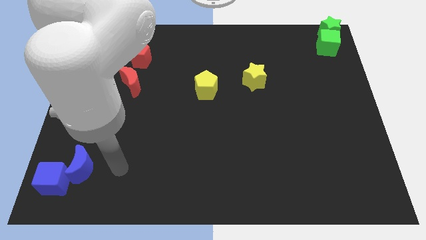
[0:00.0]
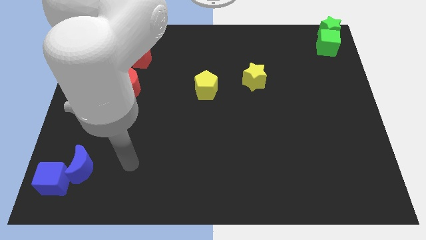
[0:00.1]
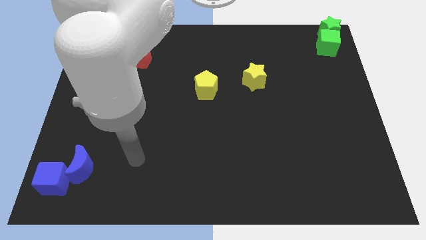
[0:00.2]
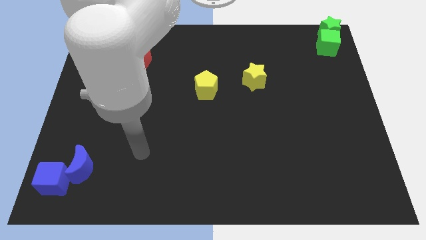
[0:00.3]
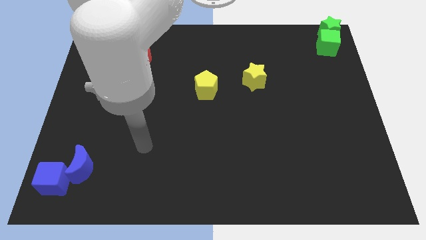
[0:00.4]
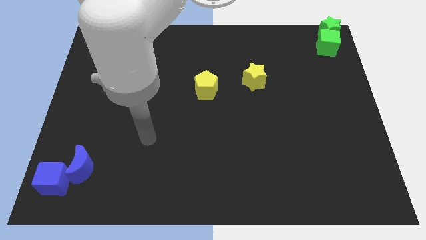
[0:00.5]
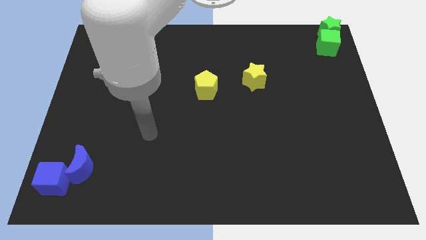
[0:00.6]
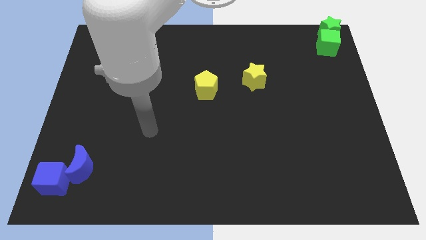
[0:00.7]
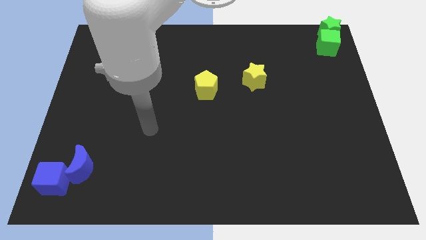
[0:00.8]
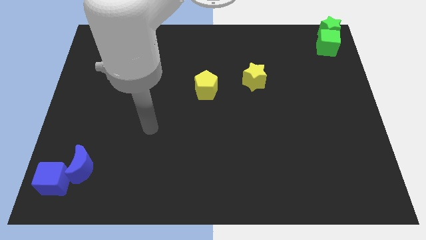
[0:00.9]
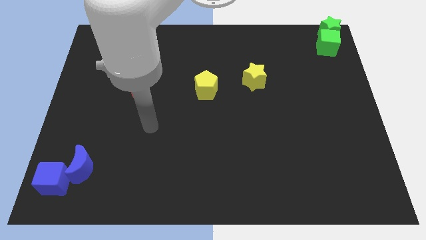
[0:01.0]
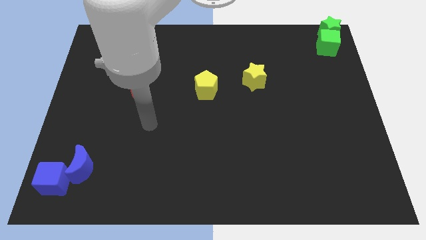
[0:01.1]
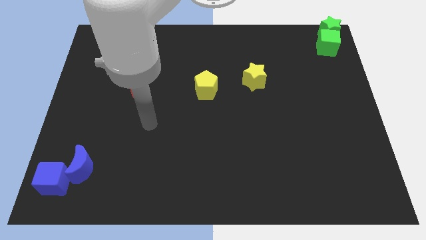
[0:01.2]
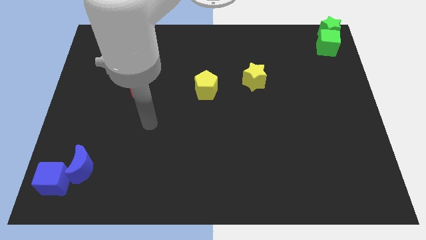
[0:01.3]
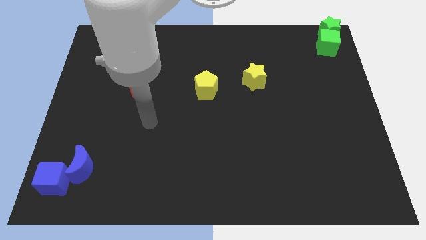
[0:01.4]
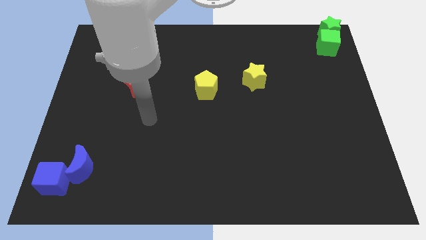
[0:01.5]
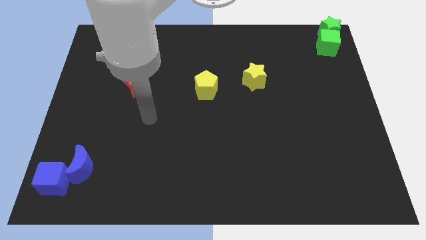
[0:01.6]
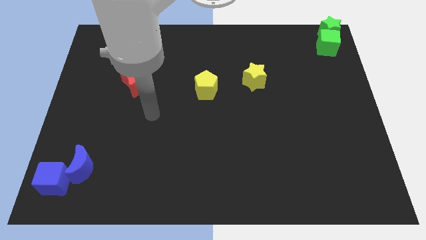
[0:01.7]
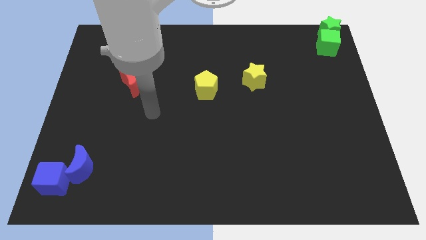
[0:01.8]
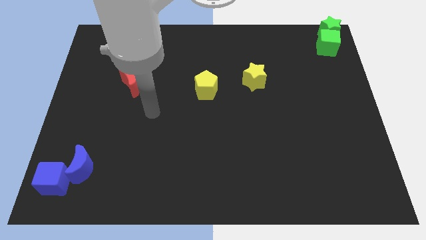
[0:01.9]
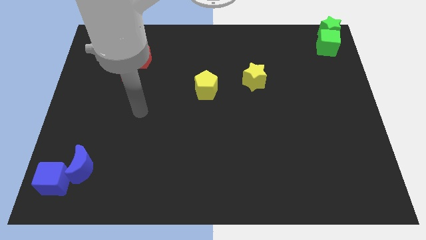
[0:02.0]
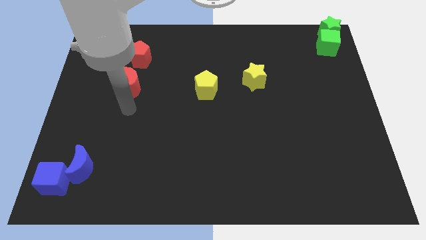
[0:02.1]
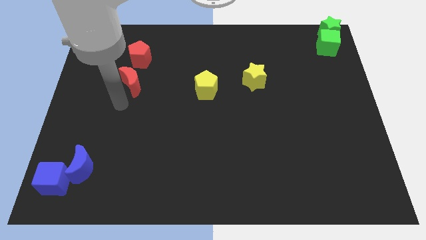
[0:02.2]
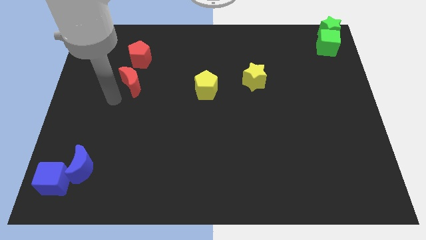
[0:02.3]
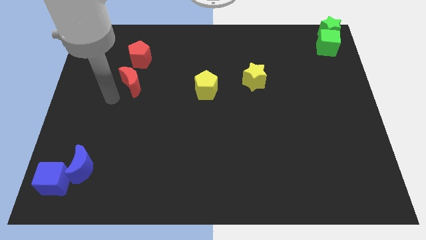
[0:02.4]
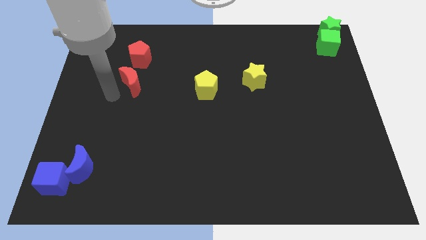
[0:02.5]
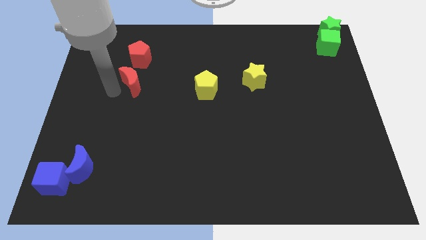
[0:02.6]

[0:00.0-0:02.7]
place your arm at the left of the red crescent

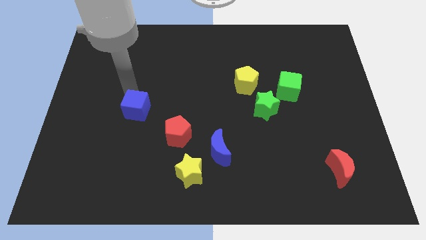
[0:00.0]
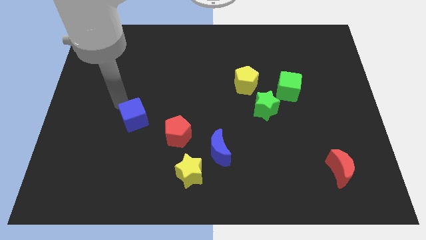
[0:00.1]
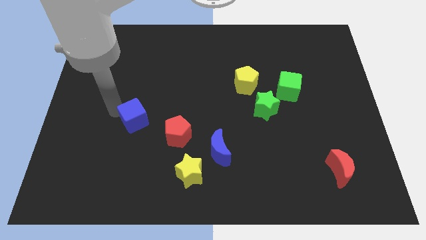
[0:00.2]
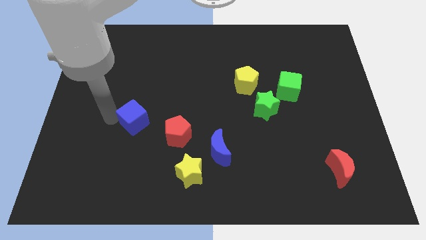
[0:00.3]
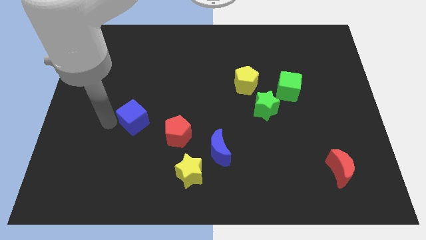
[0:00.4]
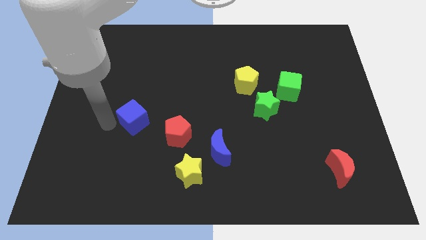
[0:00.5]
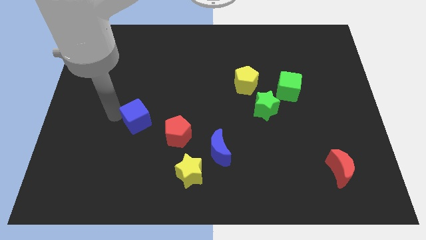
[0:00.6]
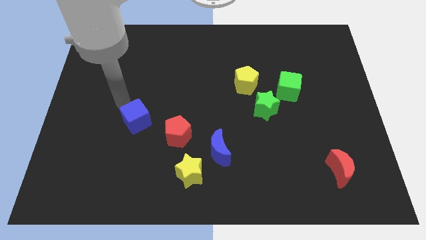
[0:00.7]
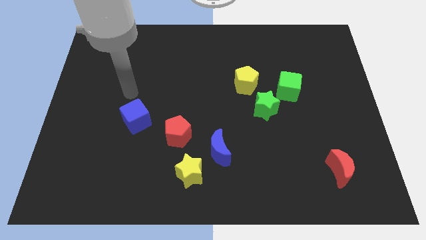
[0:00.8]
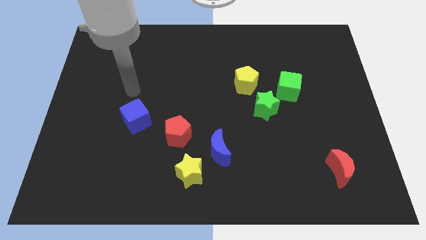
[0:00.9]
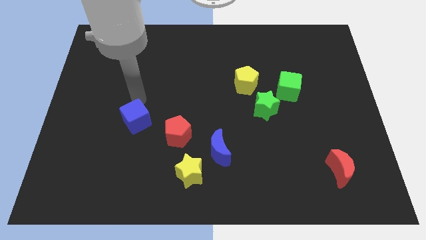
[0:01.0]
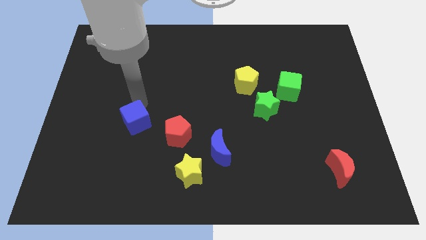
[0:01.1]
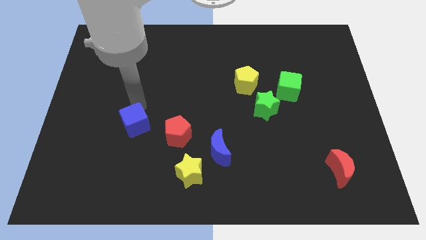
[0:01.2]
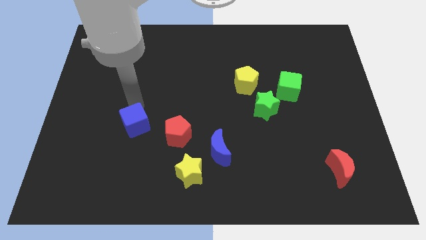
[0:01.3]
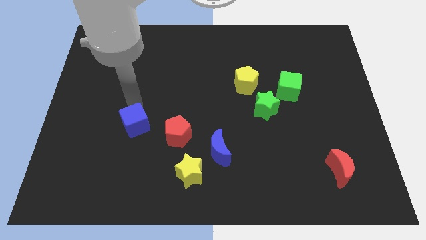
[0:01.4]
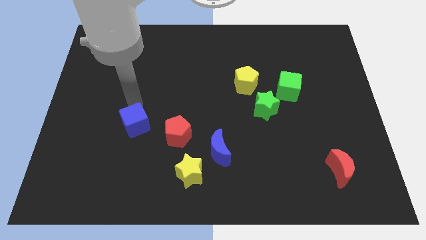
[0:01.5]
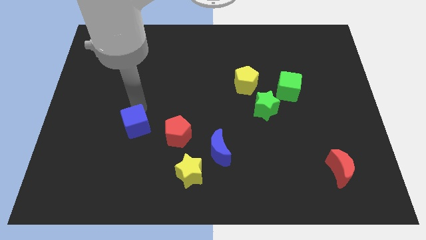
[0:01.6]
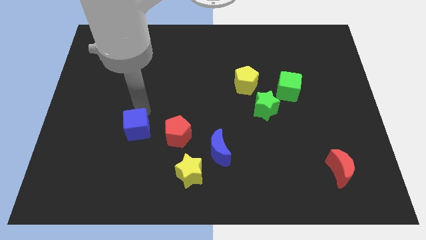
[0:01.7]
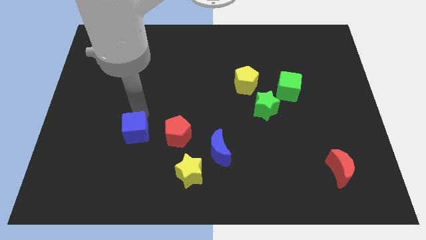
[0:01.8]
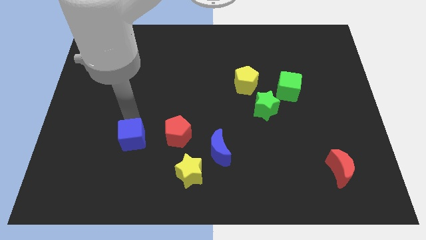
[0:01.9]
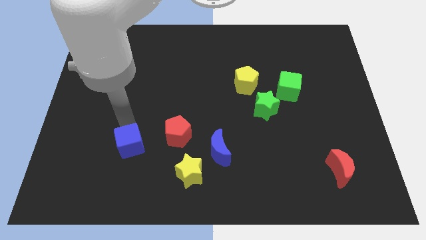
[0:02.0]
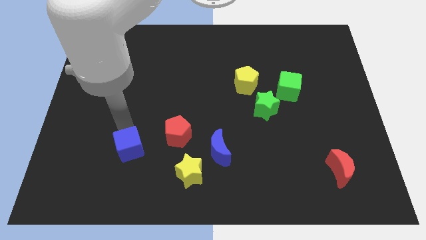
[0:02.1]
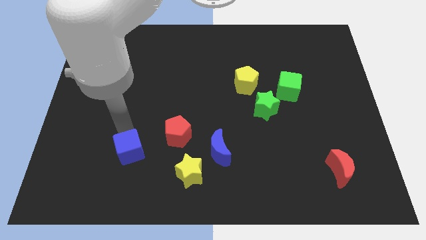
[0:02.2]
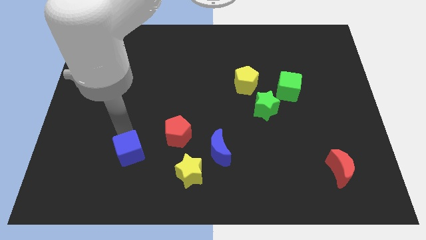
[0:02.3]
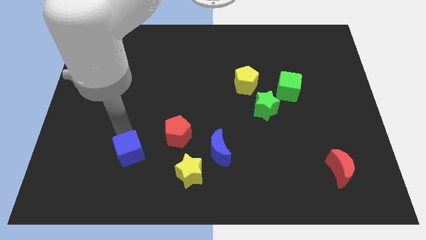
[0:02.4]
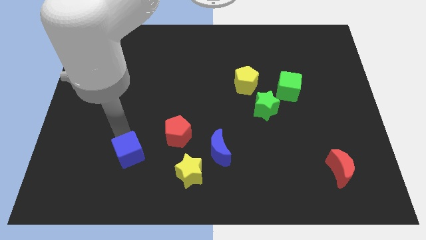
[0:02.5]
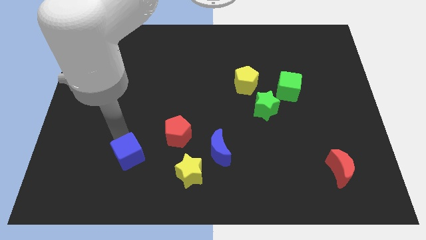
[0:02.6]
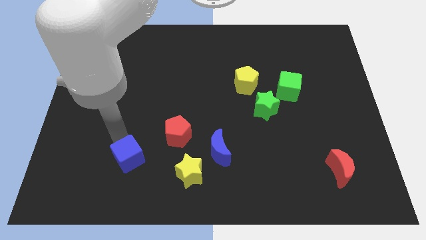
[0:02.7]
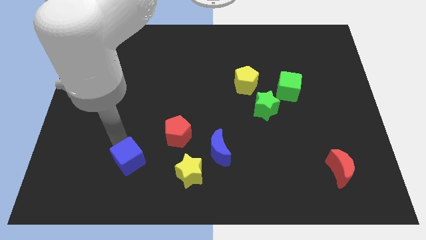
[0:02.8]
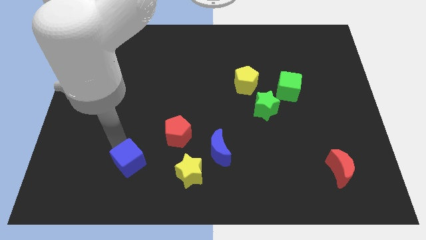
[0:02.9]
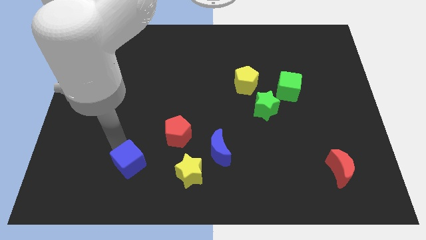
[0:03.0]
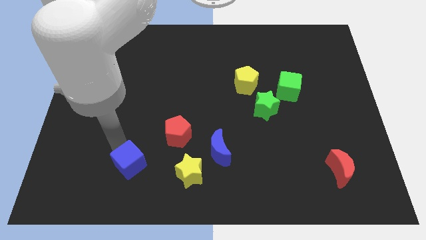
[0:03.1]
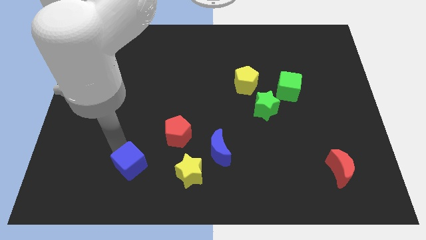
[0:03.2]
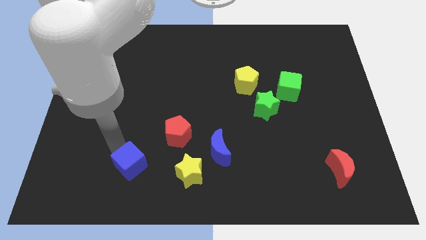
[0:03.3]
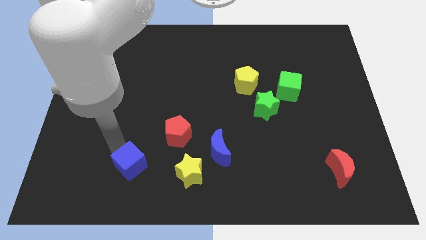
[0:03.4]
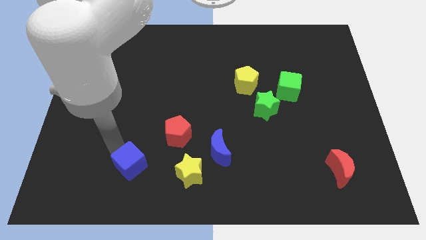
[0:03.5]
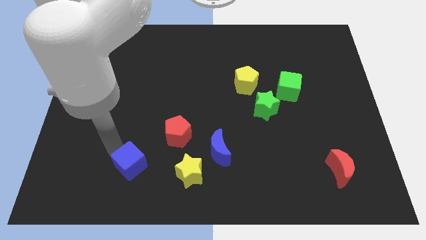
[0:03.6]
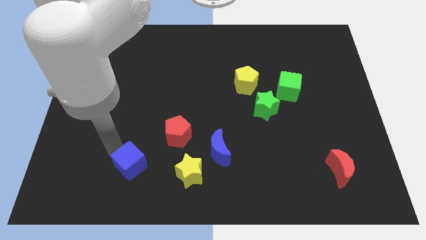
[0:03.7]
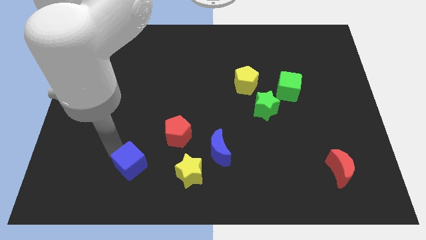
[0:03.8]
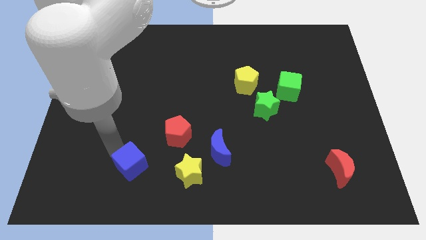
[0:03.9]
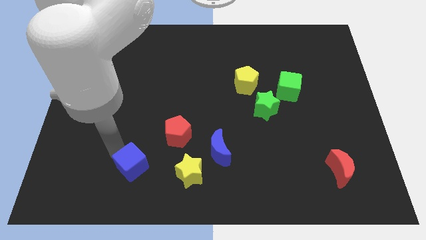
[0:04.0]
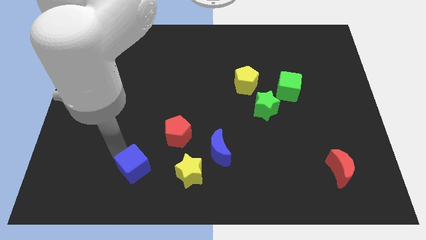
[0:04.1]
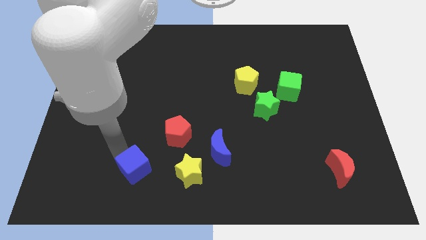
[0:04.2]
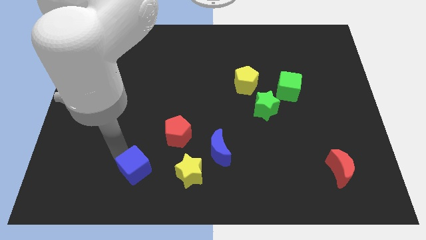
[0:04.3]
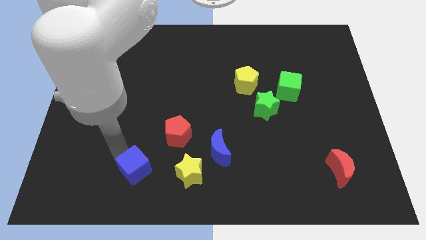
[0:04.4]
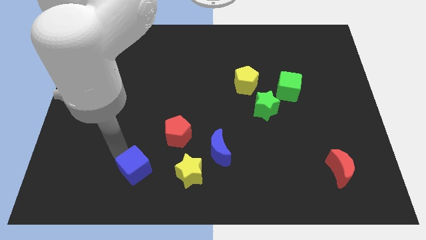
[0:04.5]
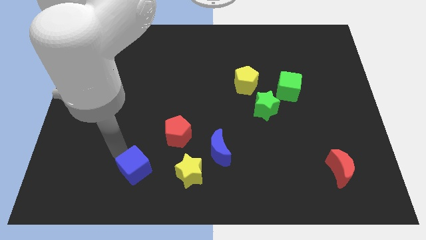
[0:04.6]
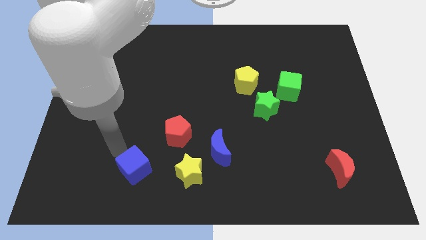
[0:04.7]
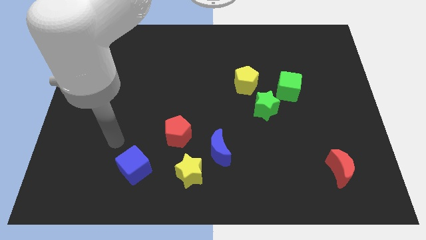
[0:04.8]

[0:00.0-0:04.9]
move the blue cube to the left side of yellow star

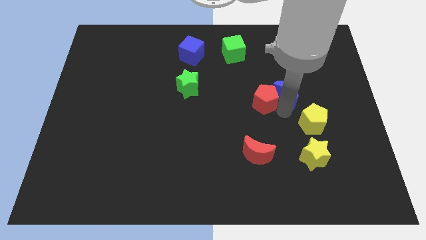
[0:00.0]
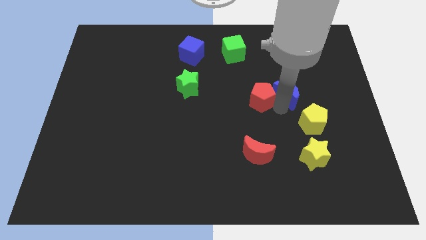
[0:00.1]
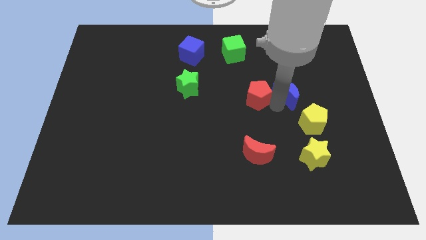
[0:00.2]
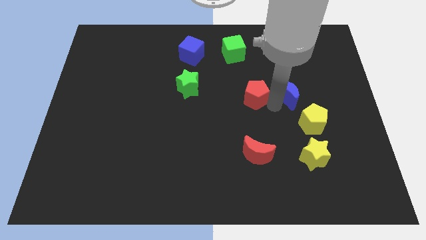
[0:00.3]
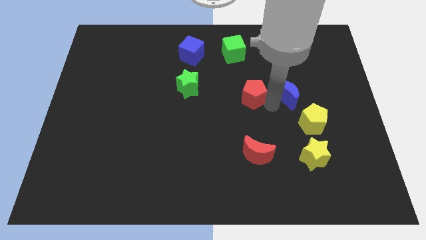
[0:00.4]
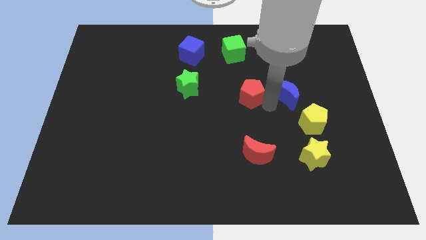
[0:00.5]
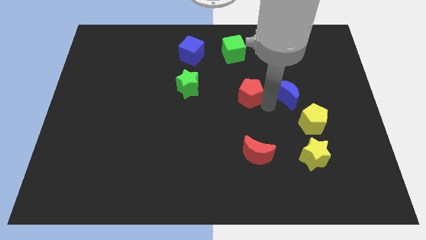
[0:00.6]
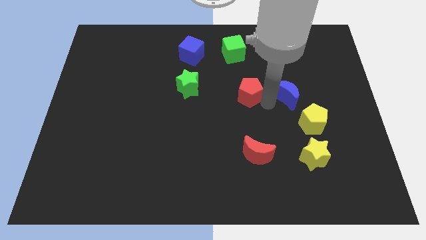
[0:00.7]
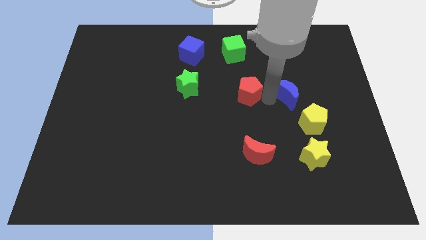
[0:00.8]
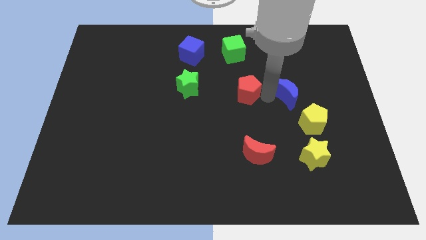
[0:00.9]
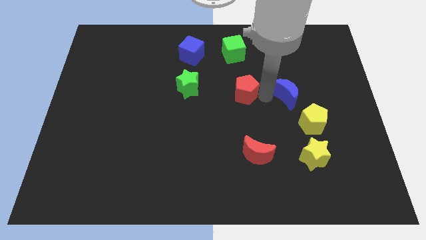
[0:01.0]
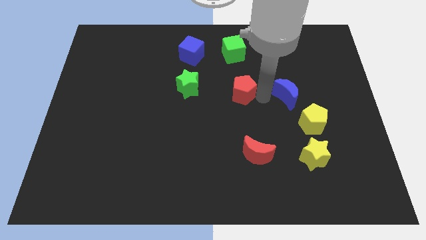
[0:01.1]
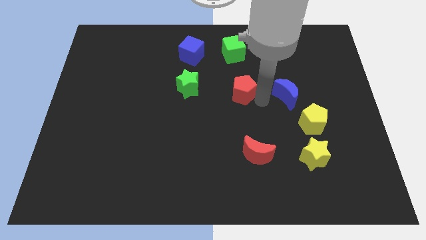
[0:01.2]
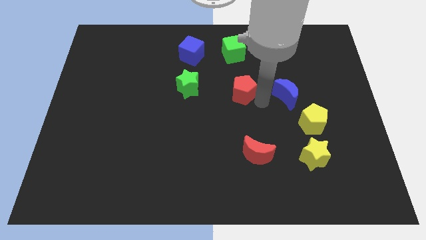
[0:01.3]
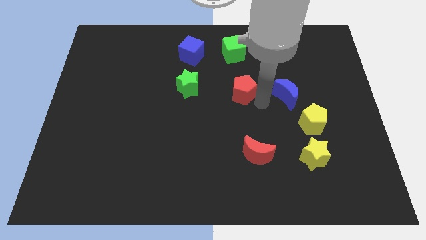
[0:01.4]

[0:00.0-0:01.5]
push the red pentagon slightly to the left
